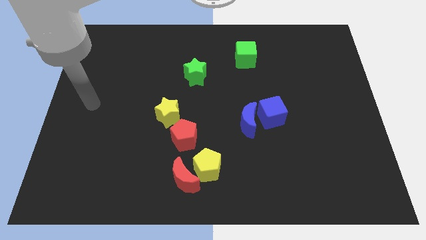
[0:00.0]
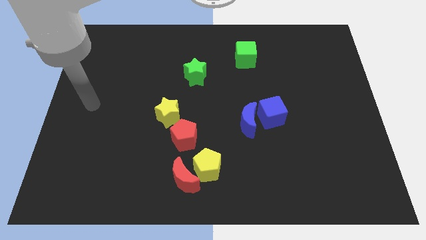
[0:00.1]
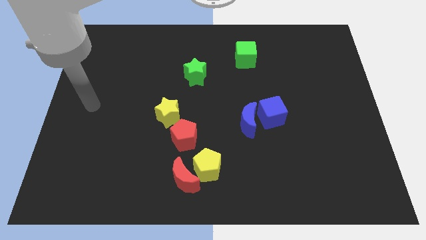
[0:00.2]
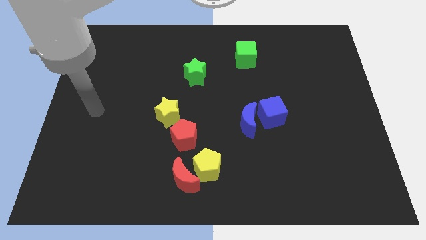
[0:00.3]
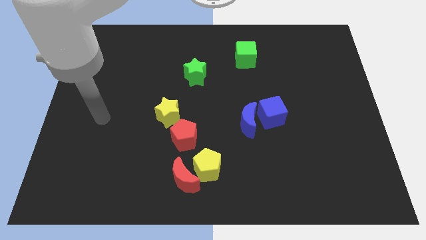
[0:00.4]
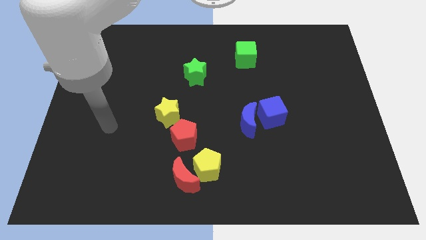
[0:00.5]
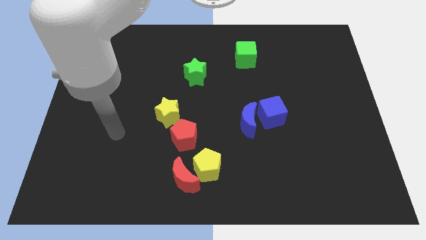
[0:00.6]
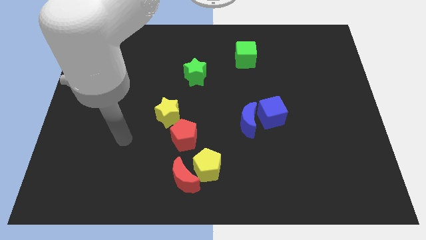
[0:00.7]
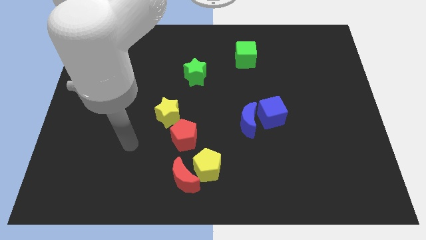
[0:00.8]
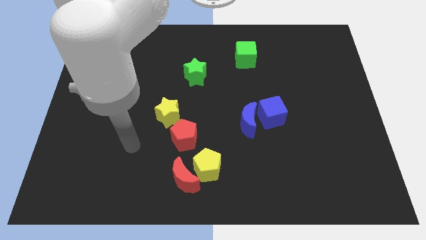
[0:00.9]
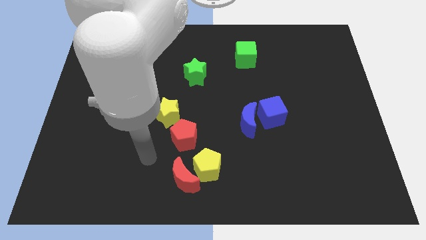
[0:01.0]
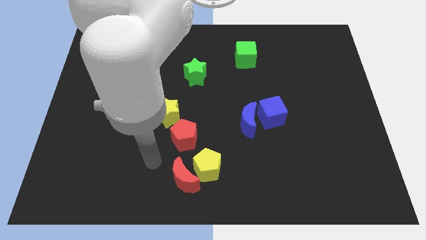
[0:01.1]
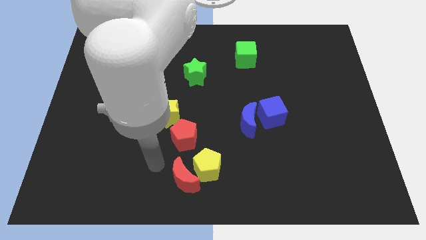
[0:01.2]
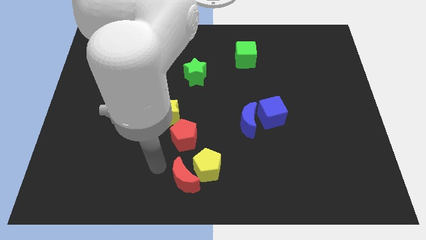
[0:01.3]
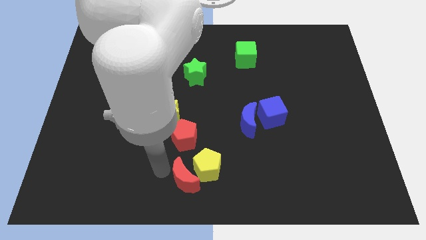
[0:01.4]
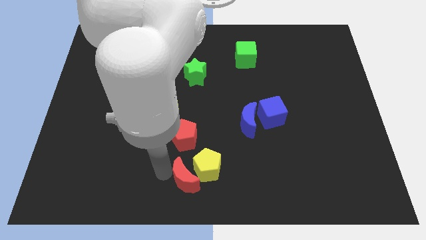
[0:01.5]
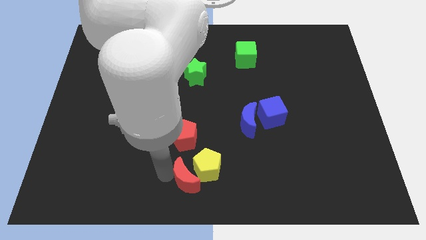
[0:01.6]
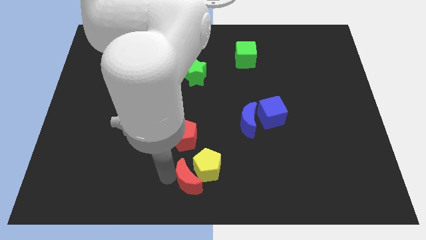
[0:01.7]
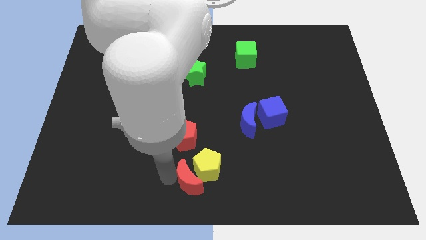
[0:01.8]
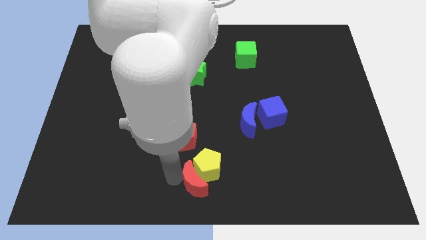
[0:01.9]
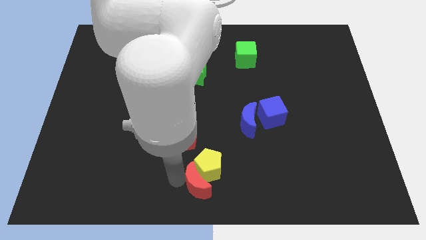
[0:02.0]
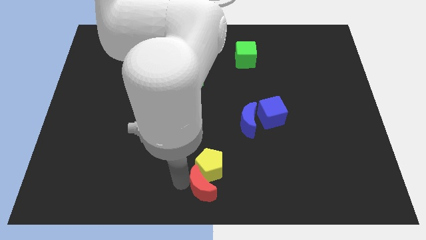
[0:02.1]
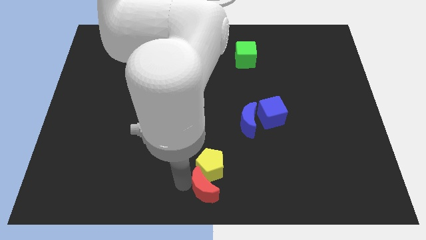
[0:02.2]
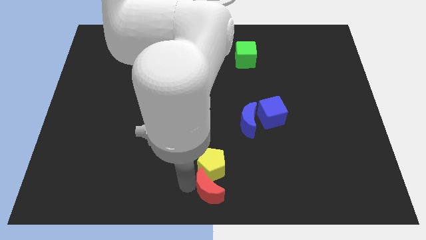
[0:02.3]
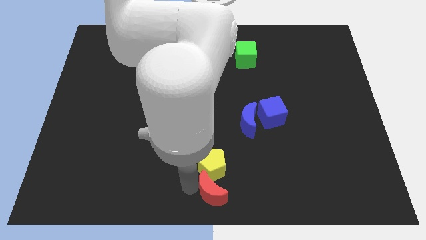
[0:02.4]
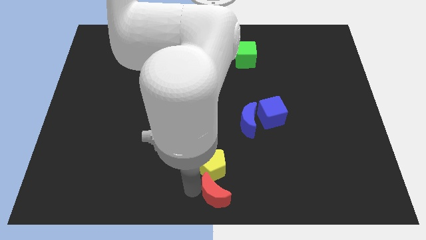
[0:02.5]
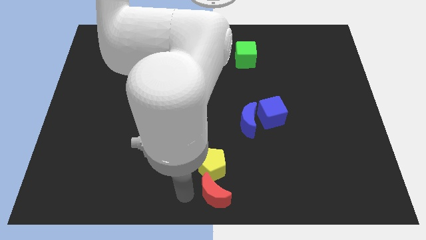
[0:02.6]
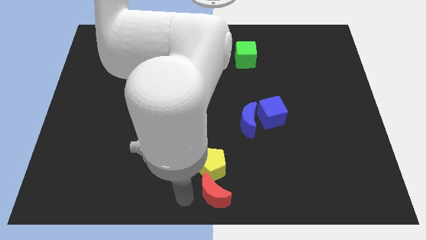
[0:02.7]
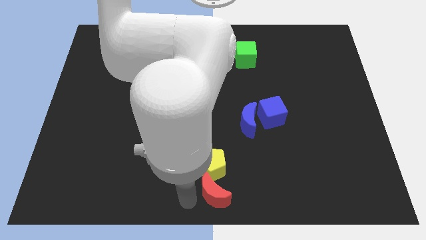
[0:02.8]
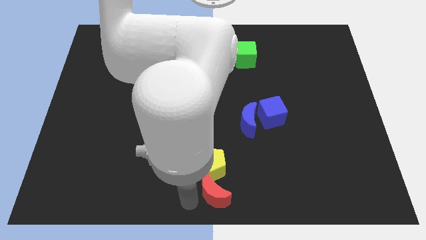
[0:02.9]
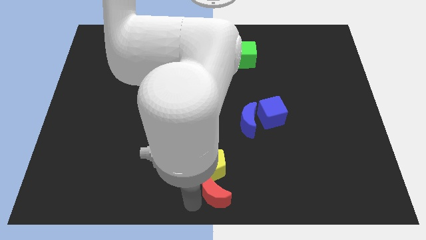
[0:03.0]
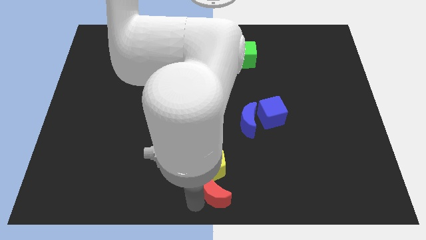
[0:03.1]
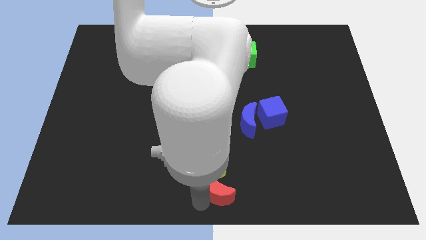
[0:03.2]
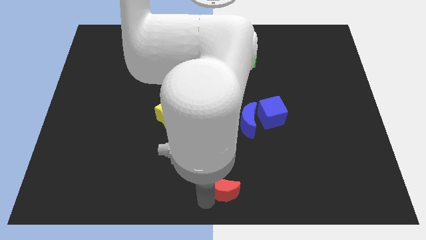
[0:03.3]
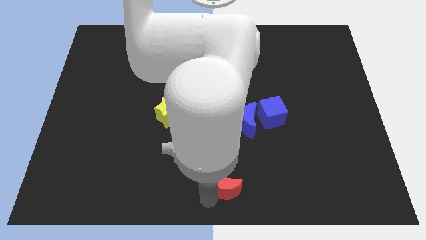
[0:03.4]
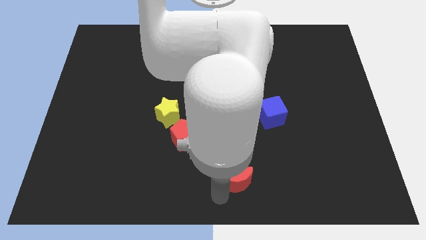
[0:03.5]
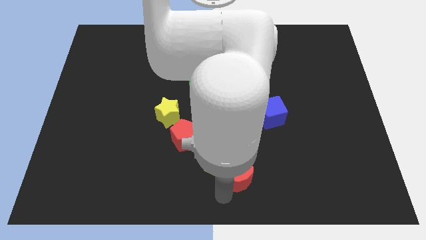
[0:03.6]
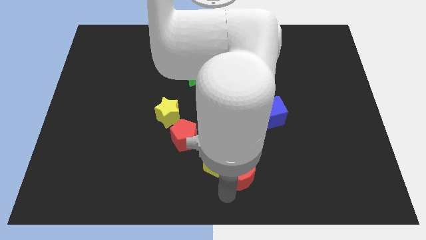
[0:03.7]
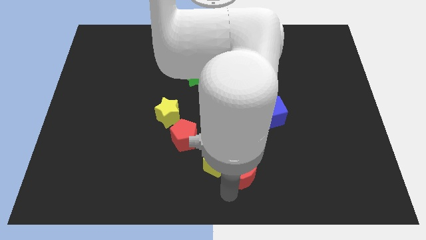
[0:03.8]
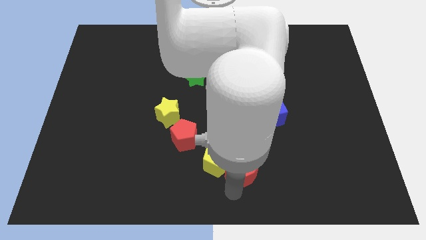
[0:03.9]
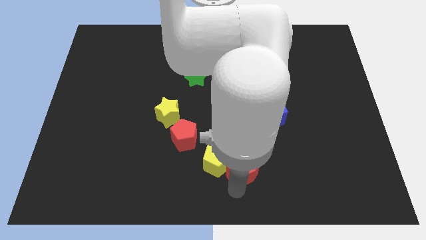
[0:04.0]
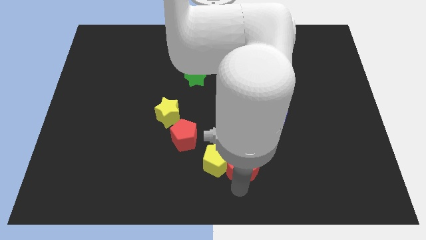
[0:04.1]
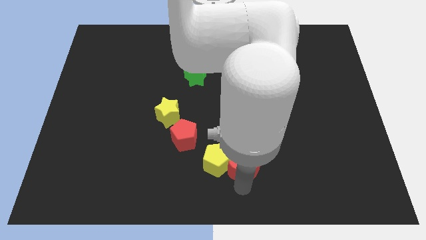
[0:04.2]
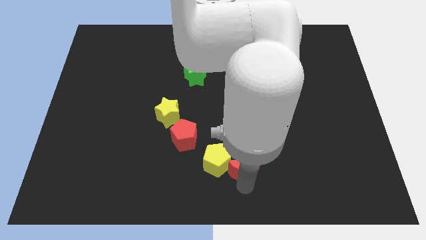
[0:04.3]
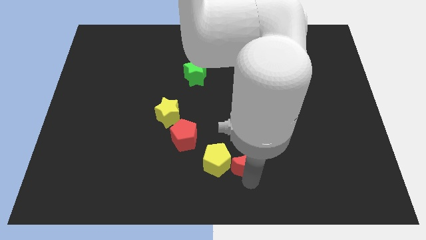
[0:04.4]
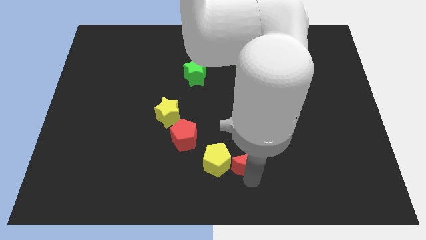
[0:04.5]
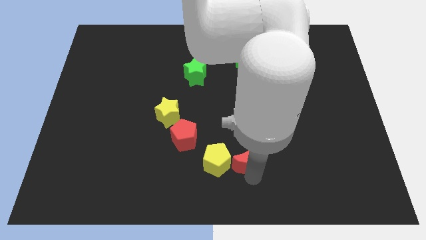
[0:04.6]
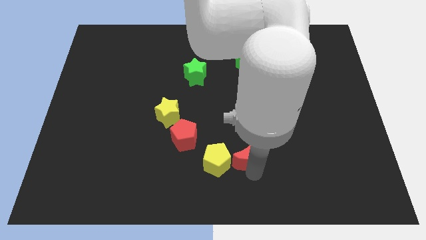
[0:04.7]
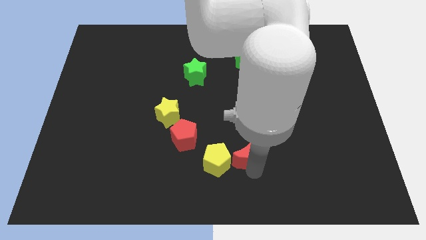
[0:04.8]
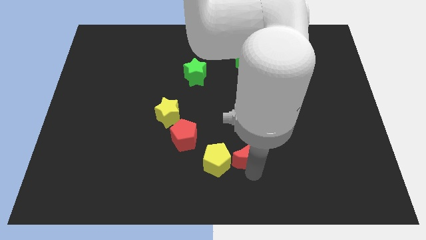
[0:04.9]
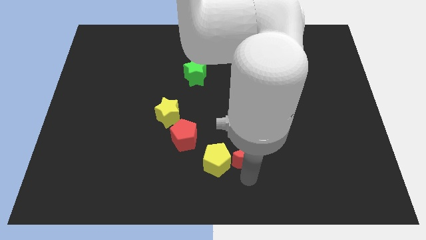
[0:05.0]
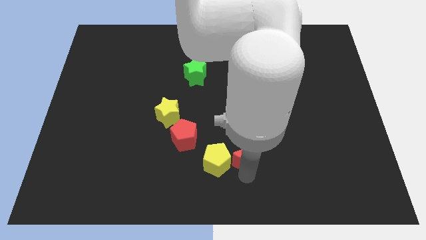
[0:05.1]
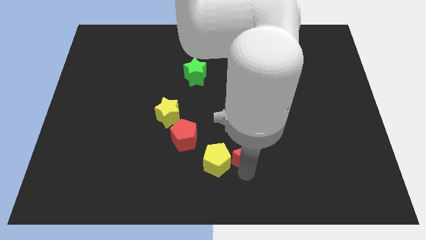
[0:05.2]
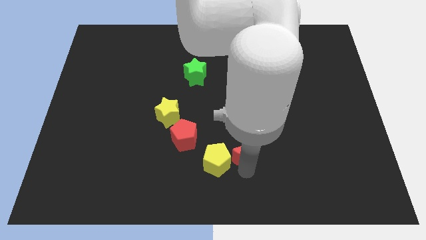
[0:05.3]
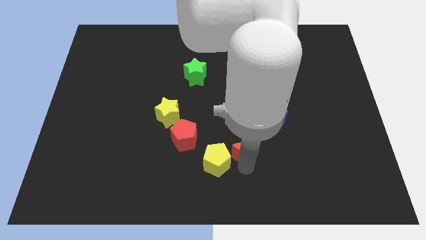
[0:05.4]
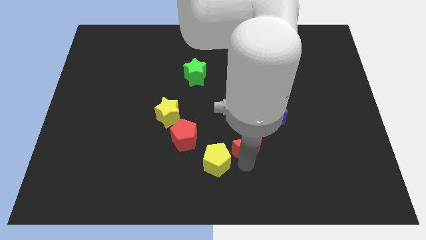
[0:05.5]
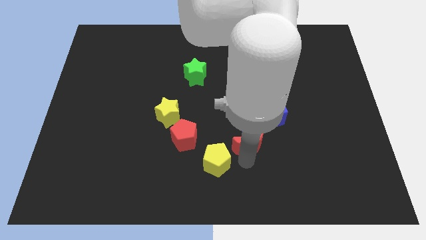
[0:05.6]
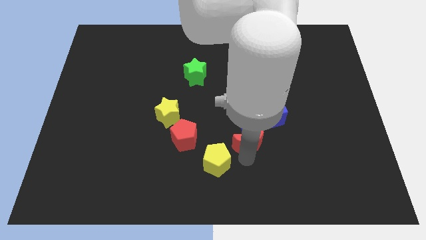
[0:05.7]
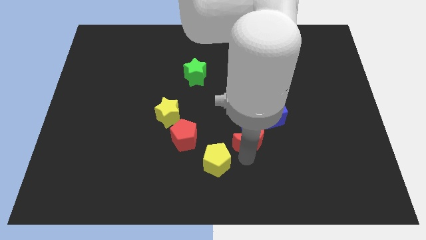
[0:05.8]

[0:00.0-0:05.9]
put the red moon towards the blue moon

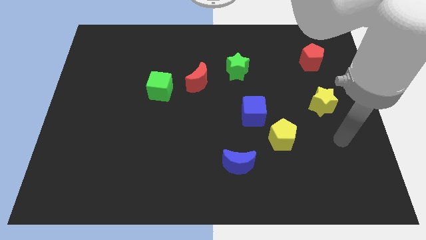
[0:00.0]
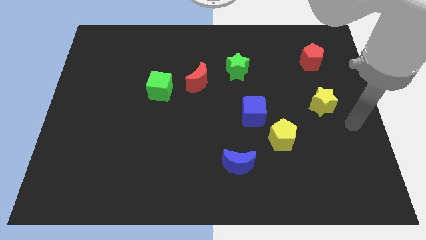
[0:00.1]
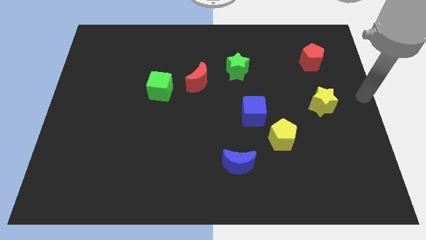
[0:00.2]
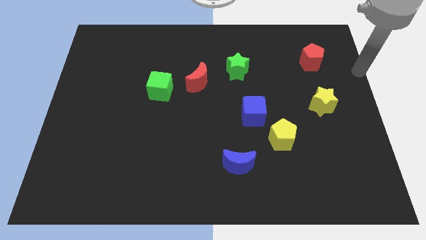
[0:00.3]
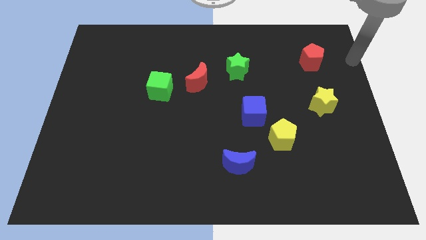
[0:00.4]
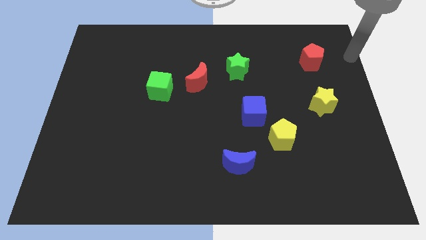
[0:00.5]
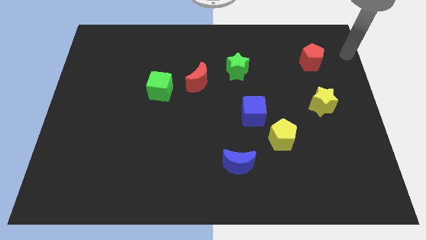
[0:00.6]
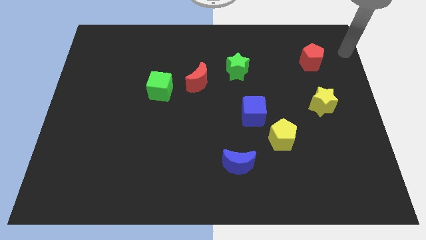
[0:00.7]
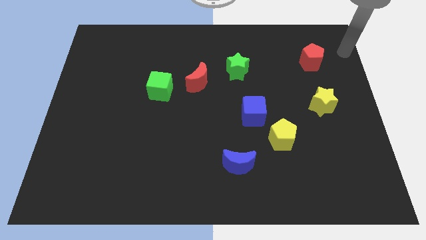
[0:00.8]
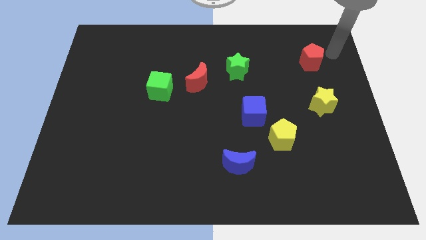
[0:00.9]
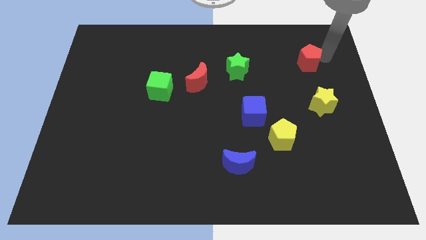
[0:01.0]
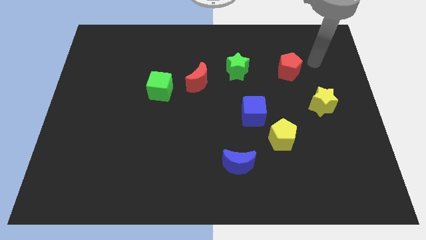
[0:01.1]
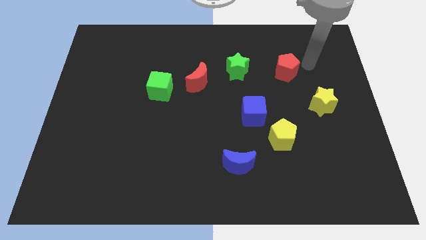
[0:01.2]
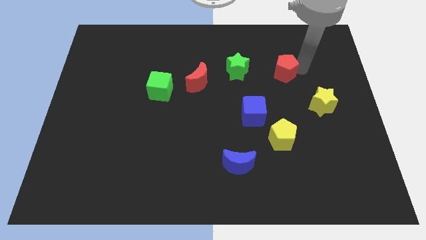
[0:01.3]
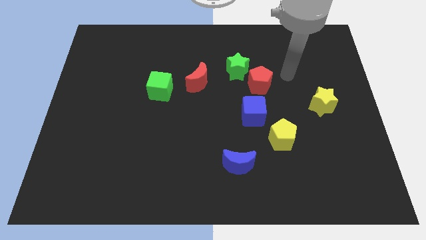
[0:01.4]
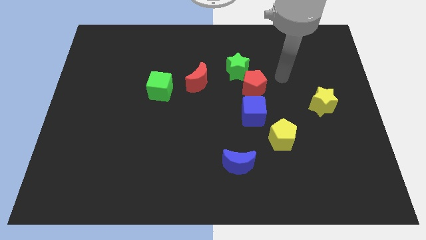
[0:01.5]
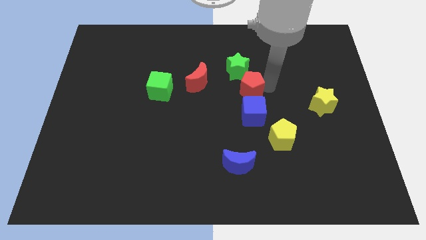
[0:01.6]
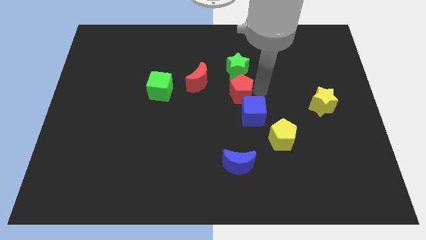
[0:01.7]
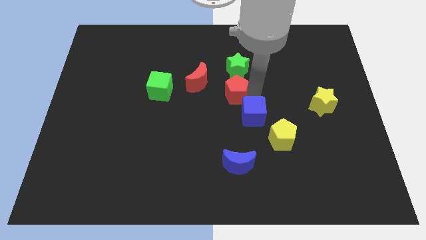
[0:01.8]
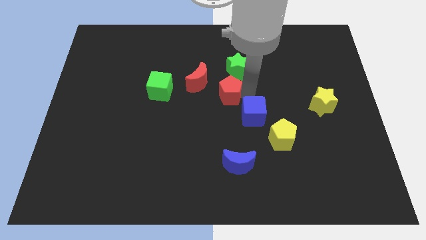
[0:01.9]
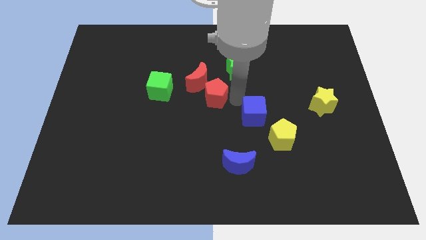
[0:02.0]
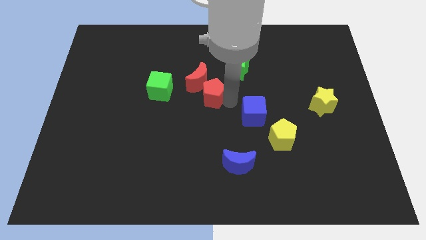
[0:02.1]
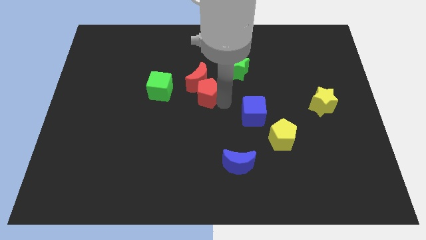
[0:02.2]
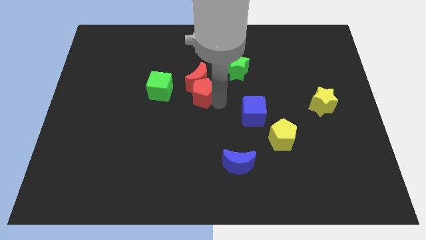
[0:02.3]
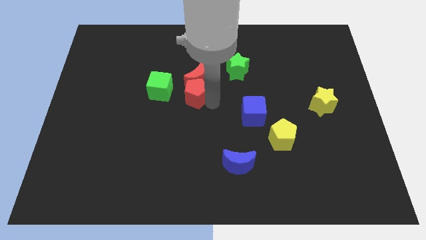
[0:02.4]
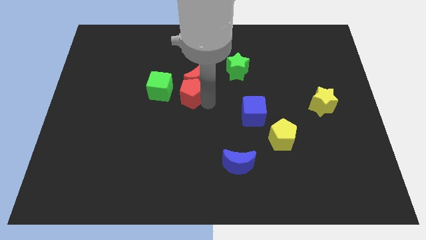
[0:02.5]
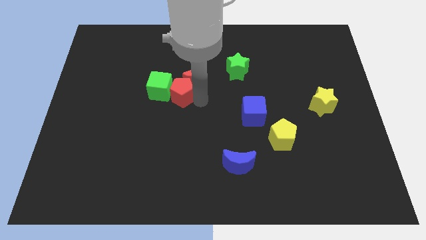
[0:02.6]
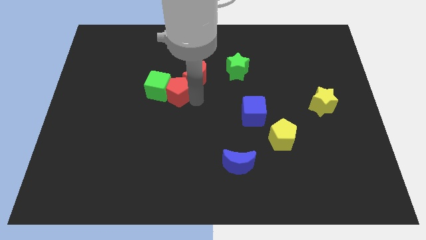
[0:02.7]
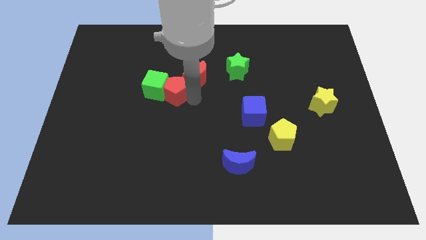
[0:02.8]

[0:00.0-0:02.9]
move the red pentagon next to the green cube
